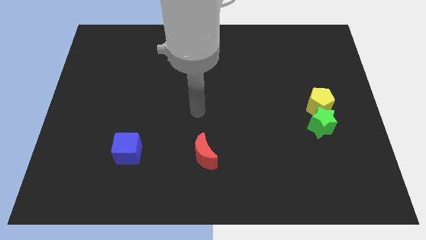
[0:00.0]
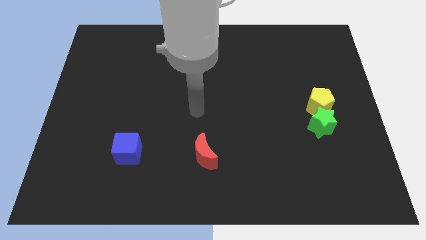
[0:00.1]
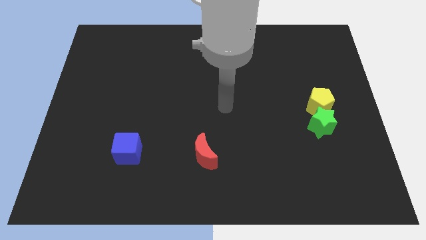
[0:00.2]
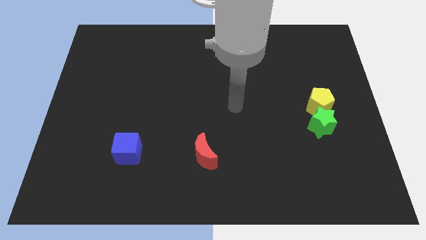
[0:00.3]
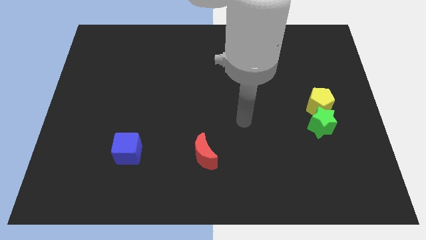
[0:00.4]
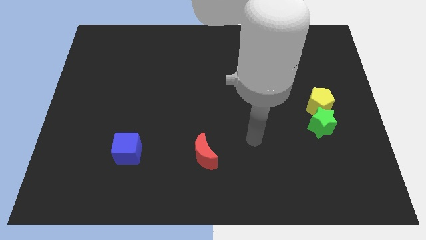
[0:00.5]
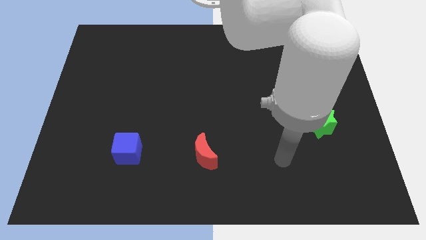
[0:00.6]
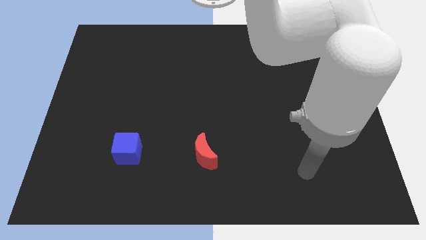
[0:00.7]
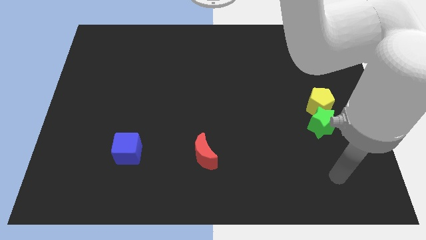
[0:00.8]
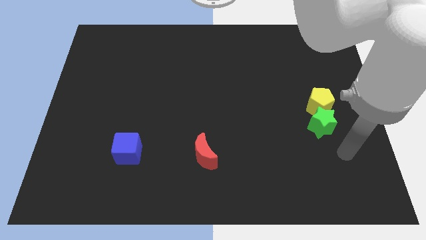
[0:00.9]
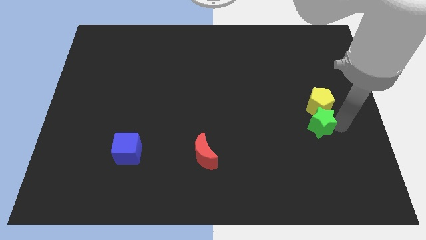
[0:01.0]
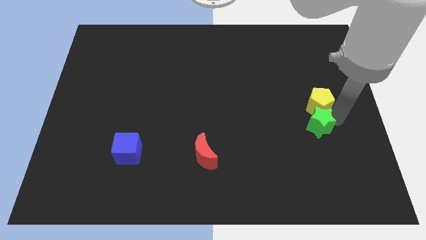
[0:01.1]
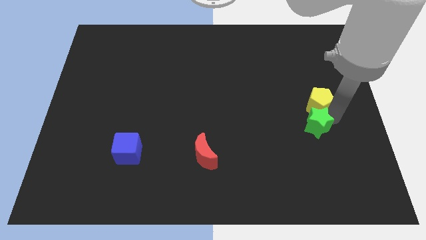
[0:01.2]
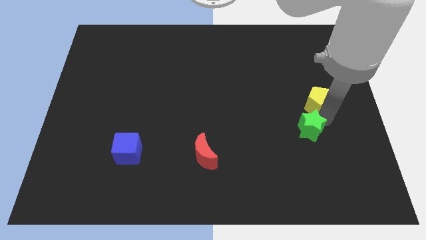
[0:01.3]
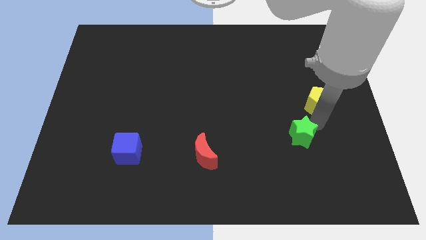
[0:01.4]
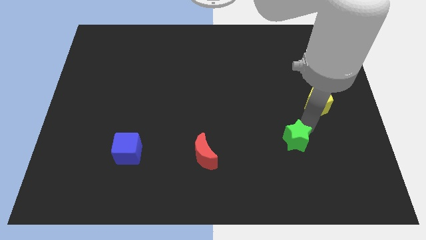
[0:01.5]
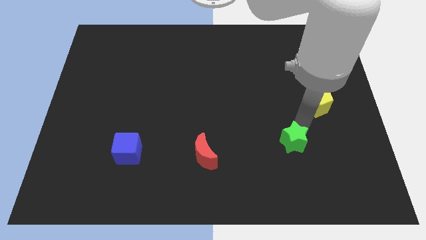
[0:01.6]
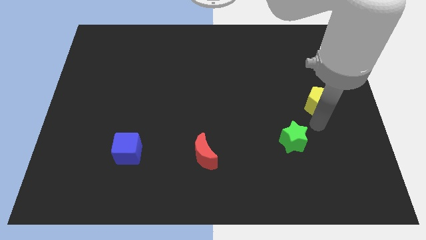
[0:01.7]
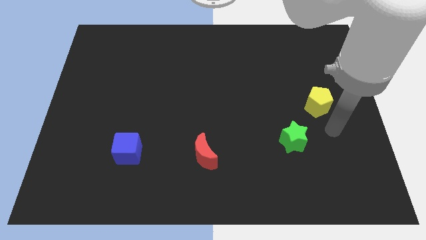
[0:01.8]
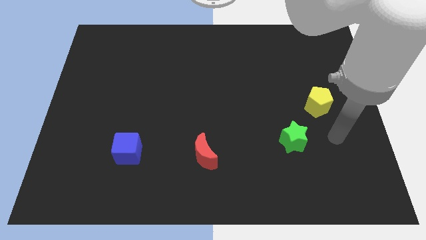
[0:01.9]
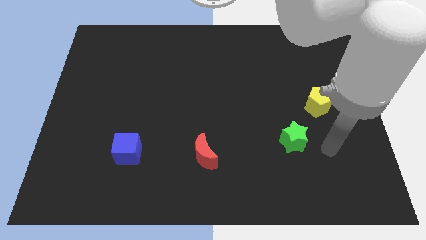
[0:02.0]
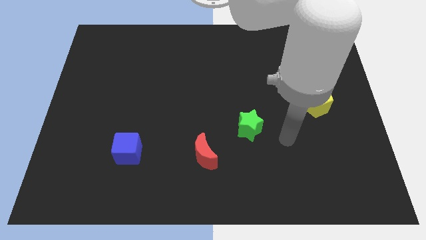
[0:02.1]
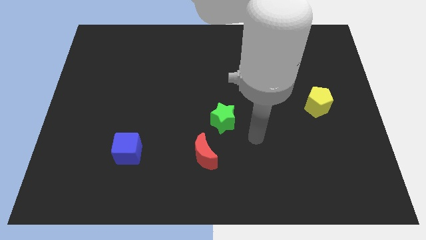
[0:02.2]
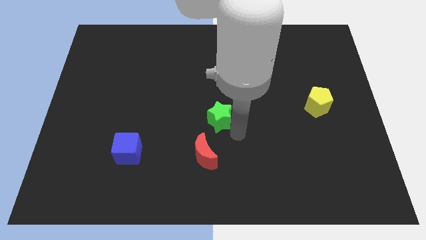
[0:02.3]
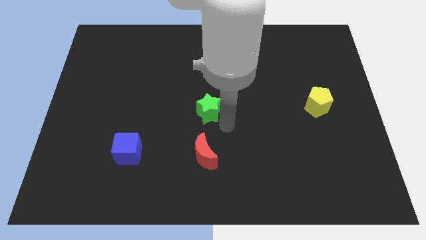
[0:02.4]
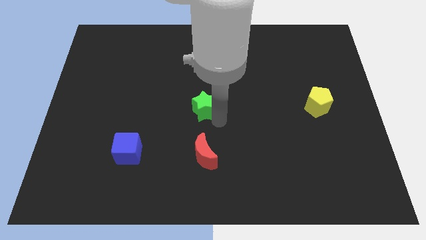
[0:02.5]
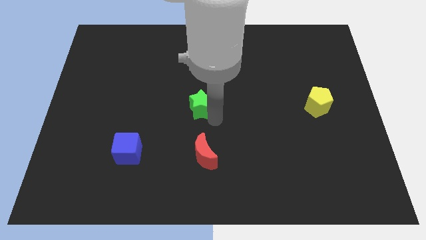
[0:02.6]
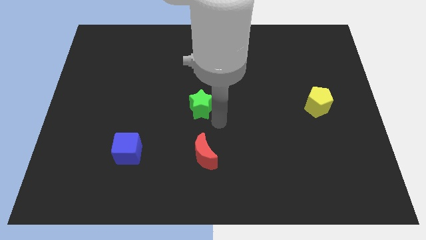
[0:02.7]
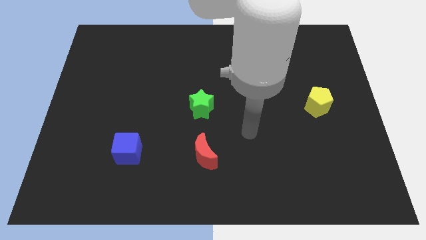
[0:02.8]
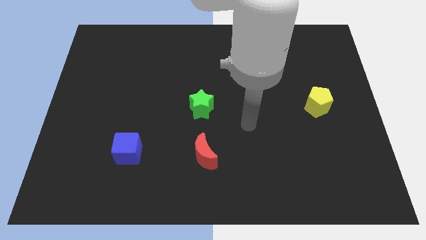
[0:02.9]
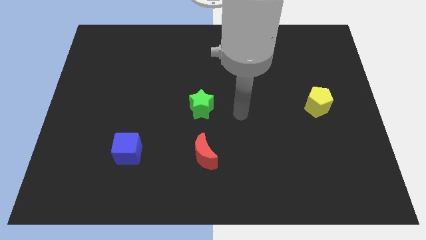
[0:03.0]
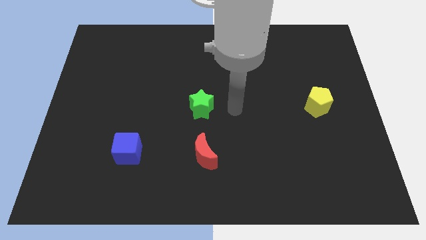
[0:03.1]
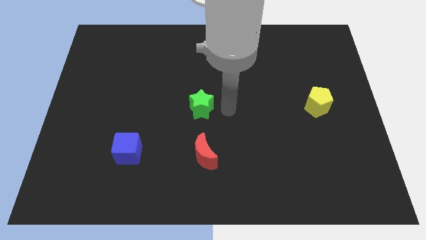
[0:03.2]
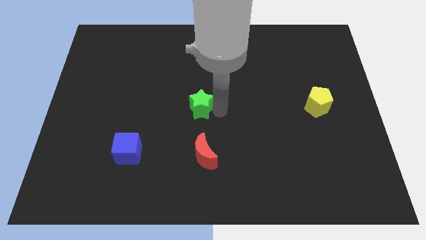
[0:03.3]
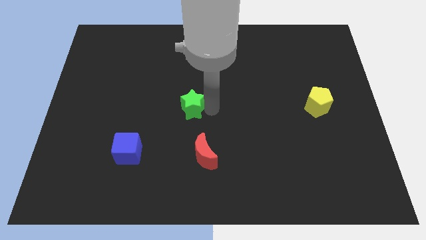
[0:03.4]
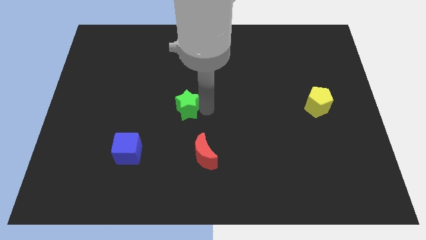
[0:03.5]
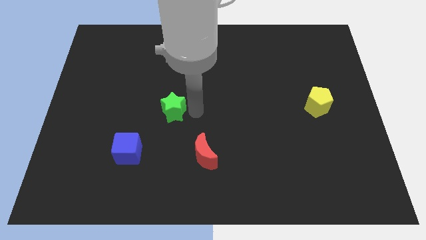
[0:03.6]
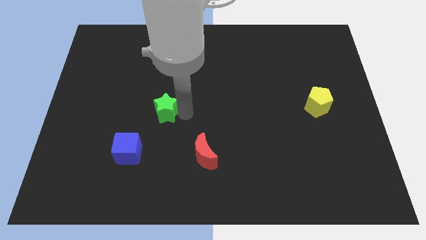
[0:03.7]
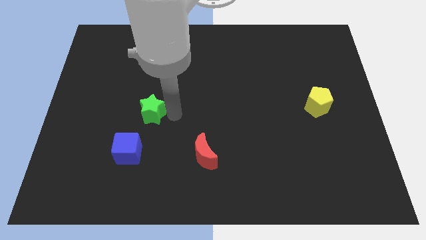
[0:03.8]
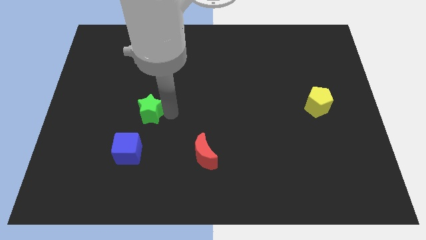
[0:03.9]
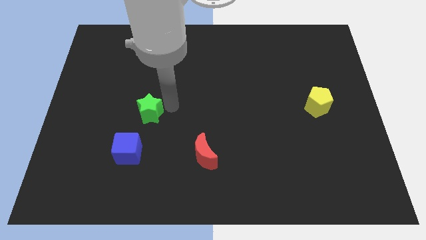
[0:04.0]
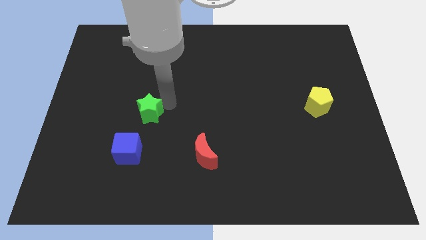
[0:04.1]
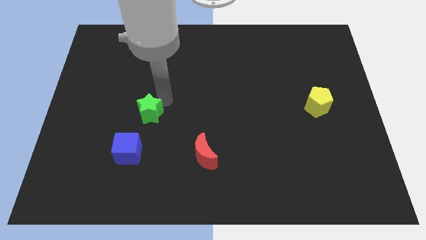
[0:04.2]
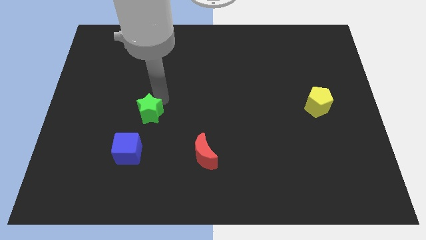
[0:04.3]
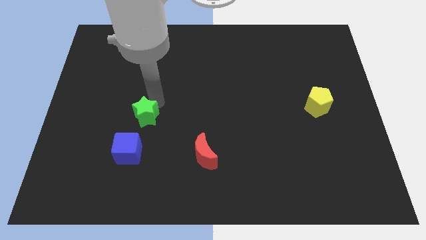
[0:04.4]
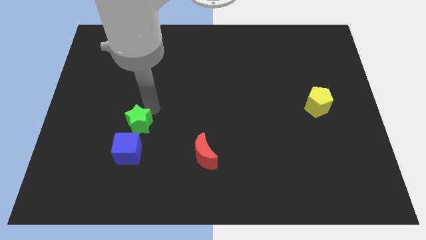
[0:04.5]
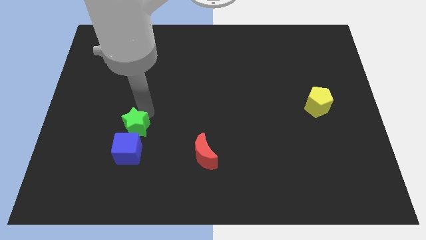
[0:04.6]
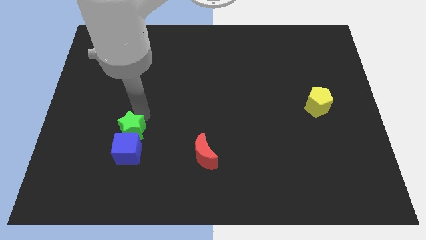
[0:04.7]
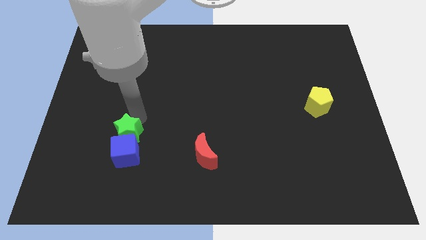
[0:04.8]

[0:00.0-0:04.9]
move the green block towards the cube

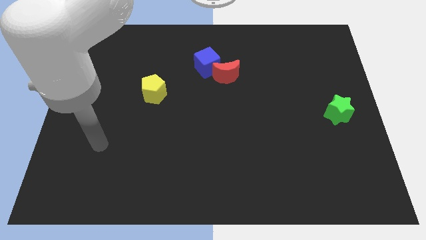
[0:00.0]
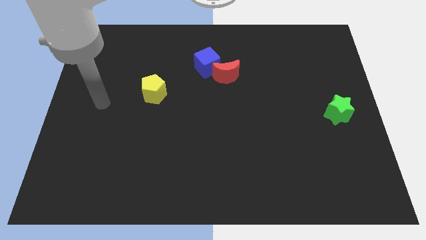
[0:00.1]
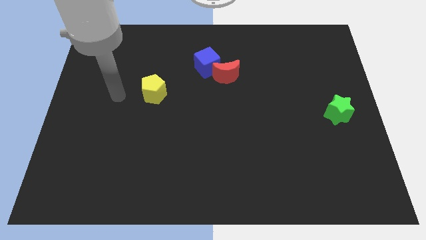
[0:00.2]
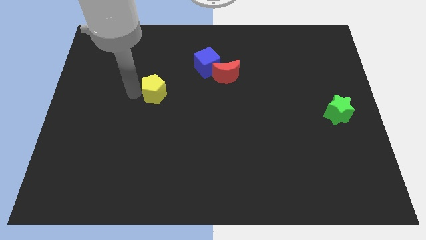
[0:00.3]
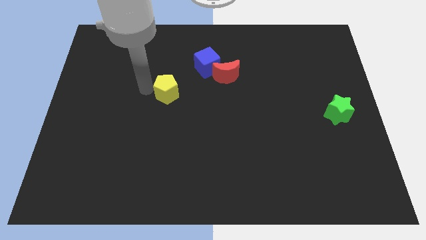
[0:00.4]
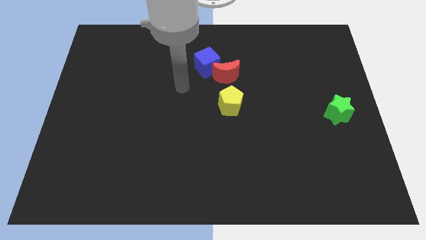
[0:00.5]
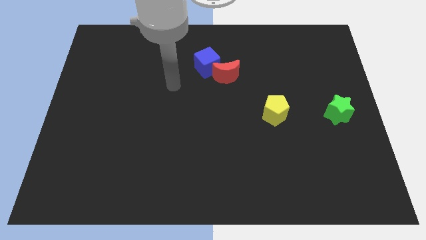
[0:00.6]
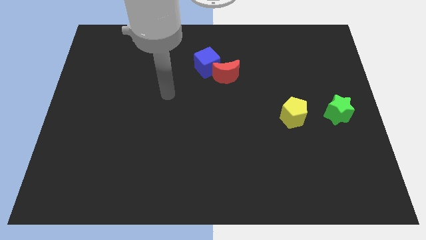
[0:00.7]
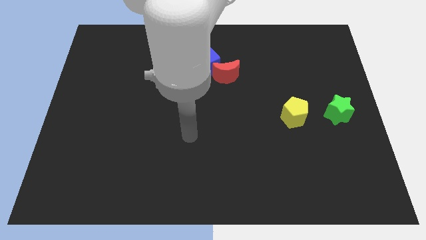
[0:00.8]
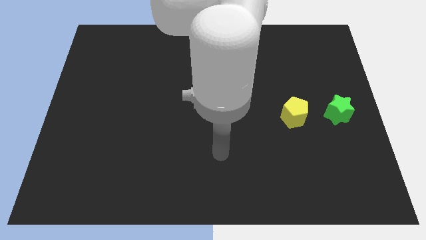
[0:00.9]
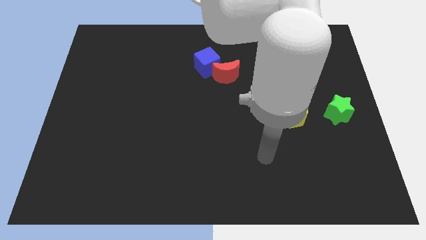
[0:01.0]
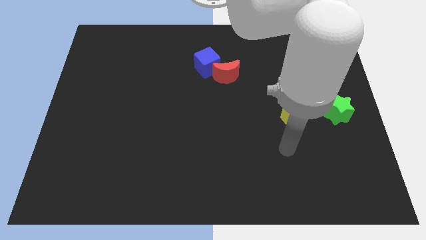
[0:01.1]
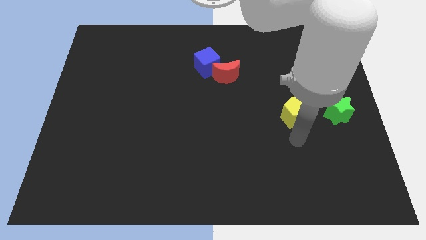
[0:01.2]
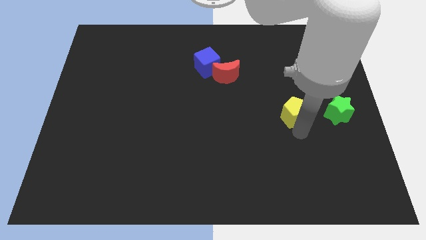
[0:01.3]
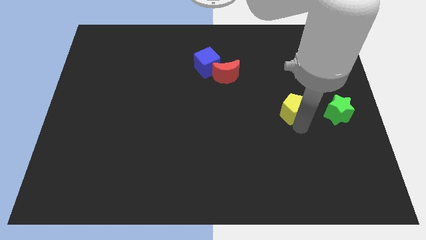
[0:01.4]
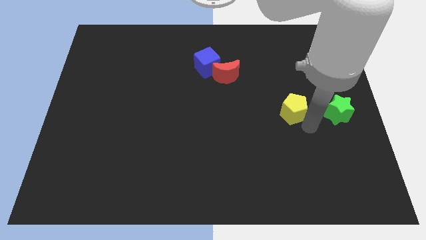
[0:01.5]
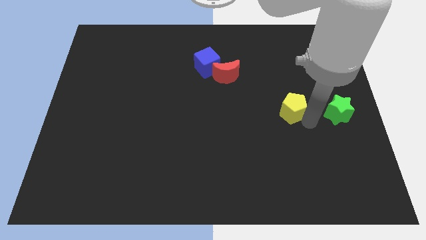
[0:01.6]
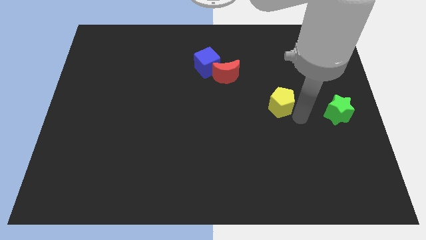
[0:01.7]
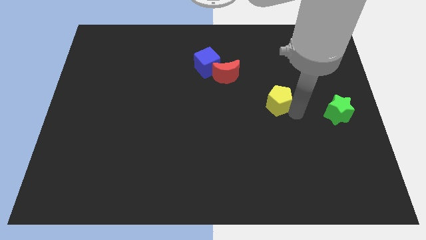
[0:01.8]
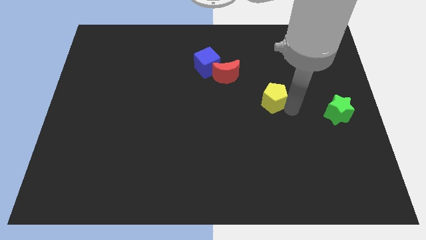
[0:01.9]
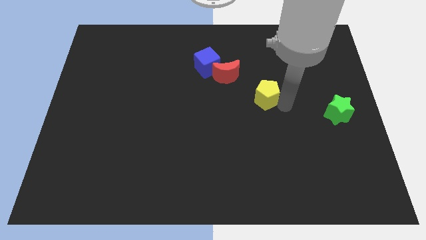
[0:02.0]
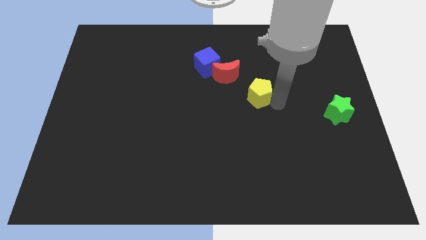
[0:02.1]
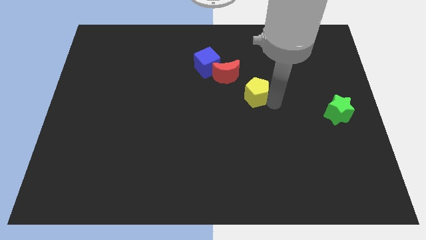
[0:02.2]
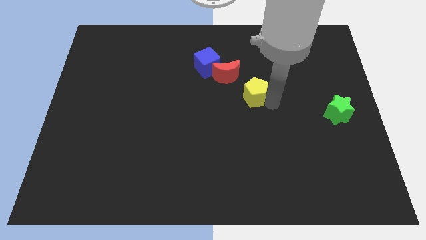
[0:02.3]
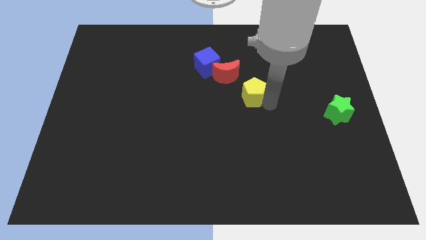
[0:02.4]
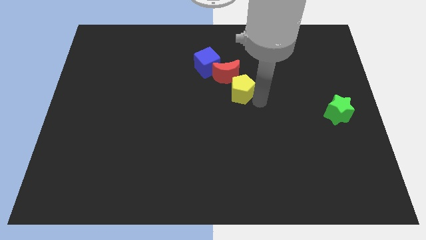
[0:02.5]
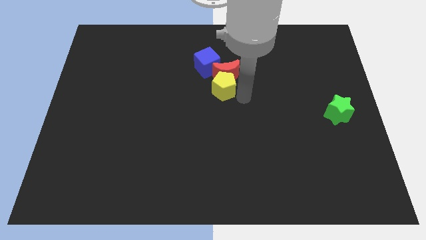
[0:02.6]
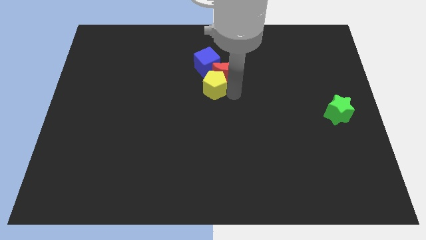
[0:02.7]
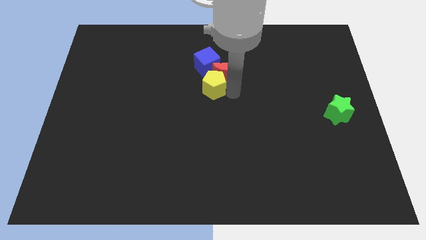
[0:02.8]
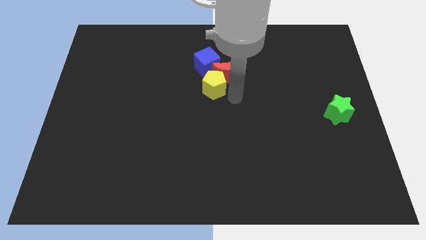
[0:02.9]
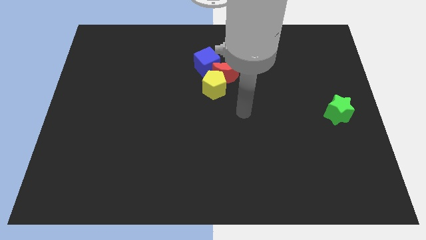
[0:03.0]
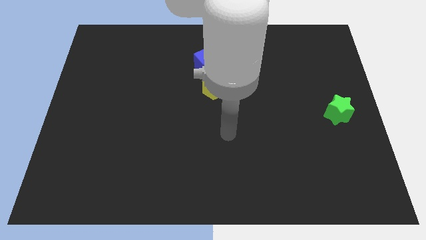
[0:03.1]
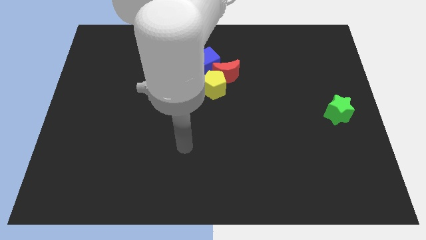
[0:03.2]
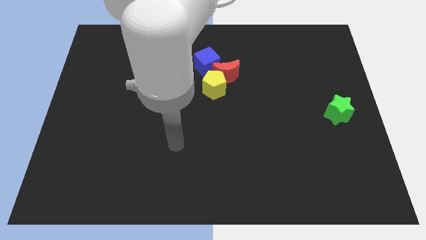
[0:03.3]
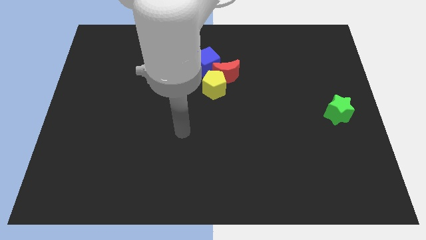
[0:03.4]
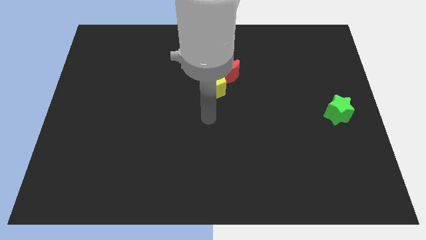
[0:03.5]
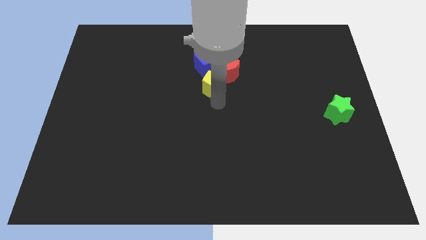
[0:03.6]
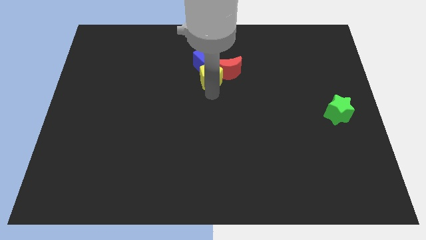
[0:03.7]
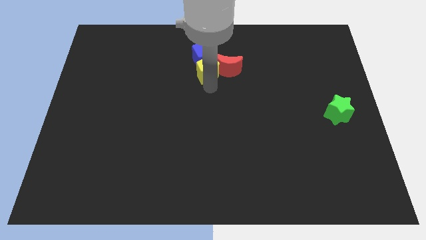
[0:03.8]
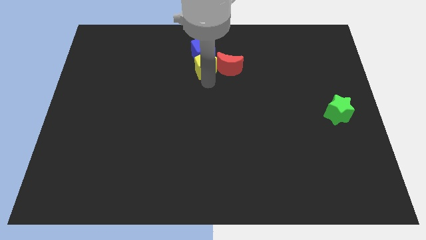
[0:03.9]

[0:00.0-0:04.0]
put the yellow pentagon next to the blue cube
